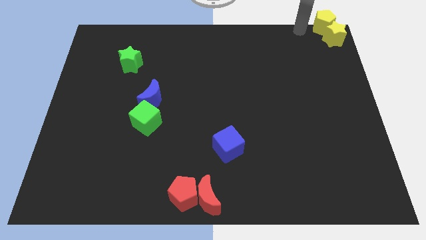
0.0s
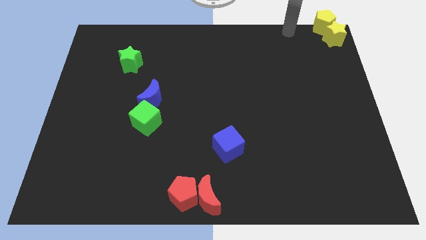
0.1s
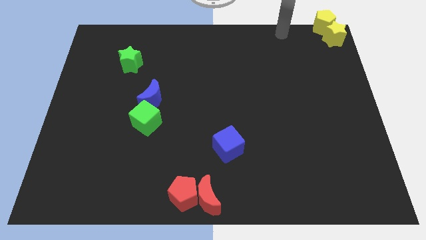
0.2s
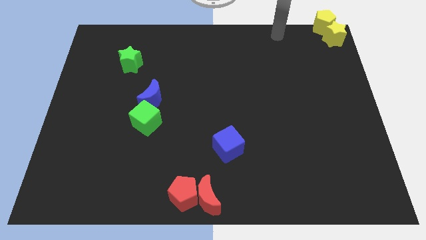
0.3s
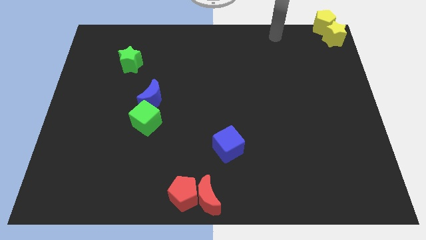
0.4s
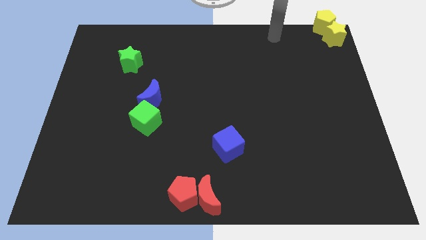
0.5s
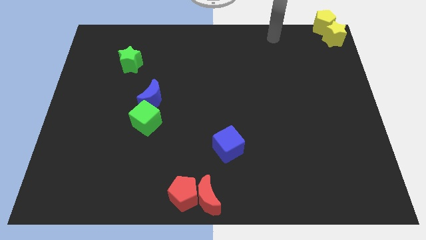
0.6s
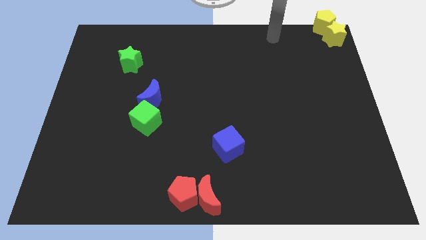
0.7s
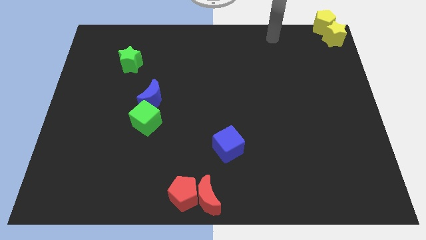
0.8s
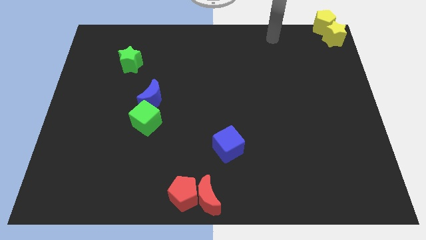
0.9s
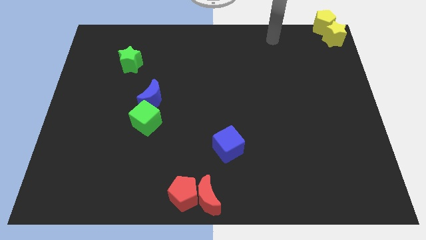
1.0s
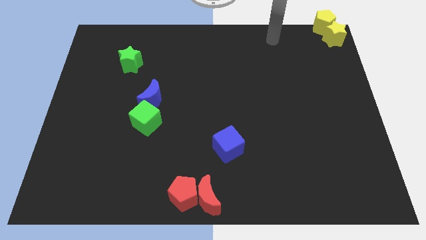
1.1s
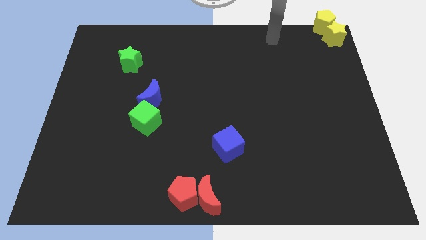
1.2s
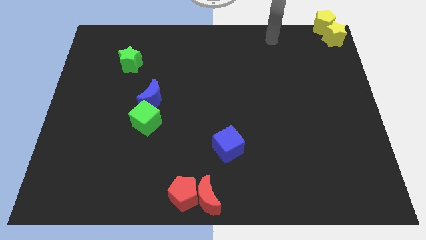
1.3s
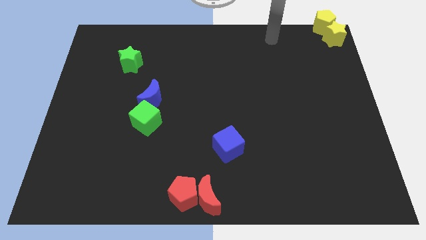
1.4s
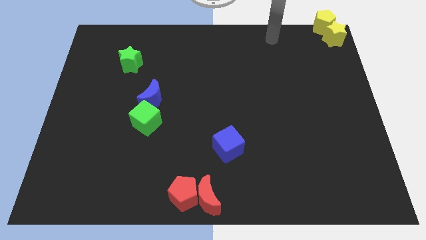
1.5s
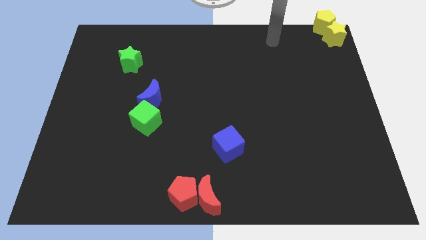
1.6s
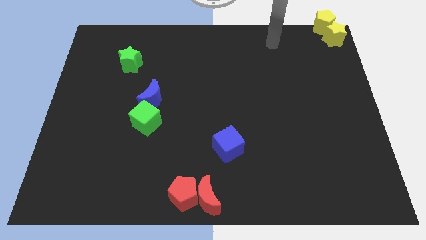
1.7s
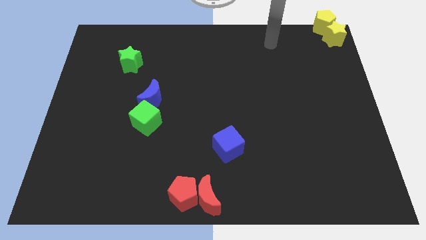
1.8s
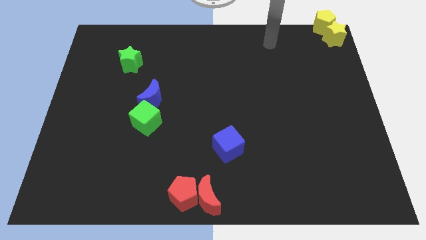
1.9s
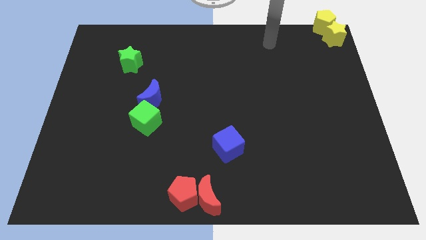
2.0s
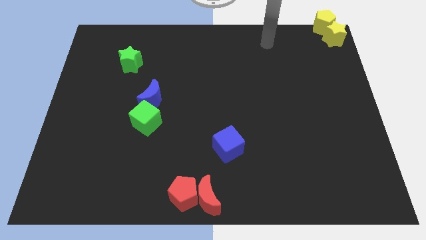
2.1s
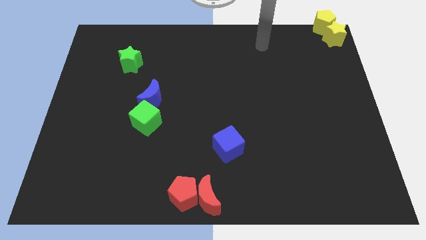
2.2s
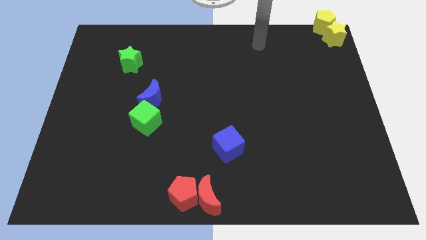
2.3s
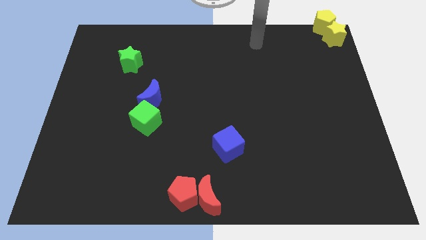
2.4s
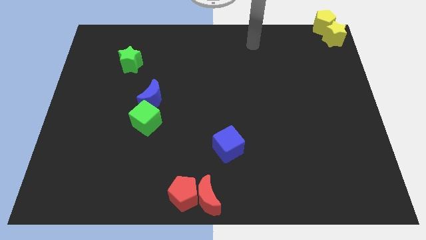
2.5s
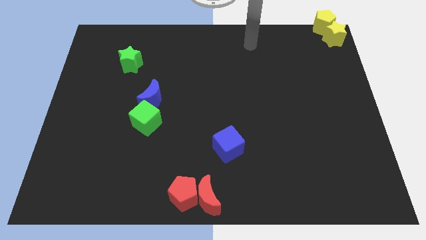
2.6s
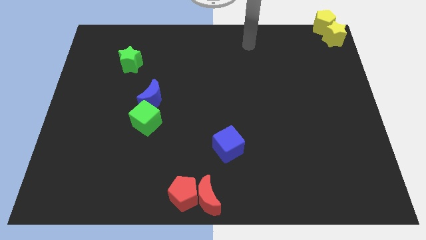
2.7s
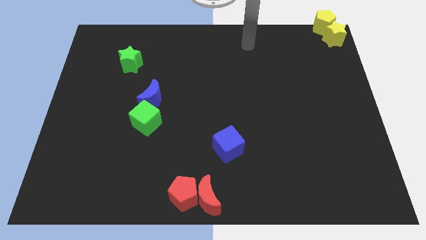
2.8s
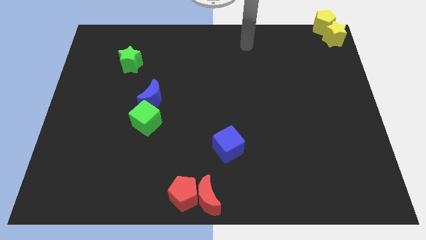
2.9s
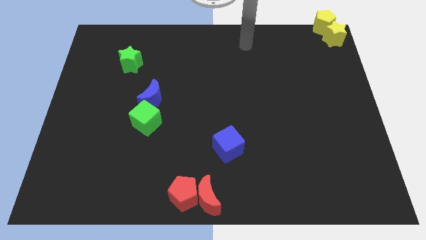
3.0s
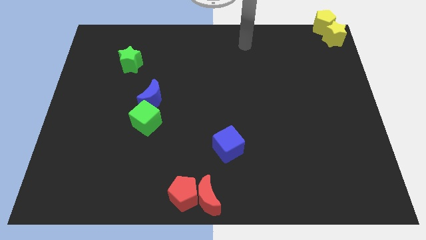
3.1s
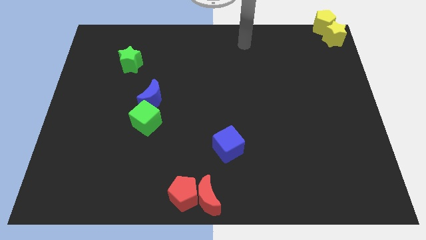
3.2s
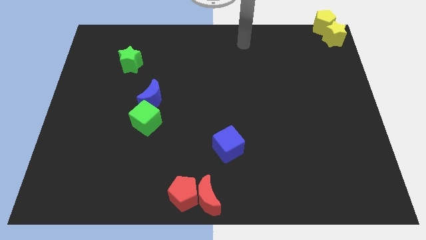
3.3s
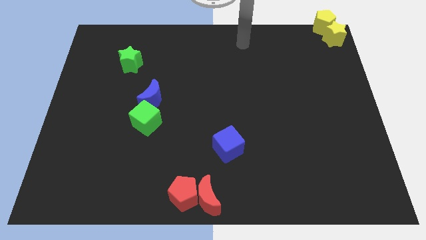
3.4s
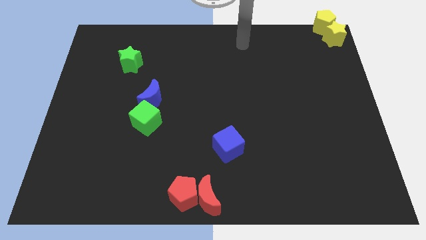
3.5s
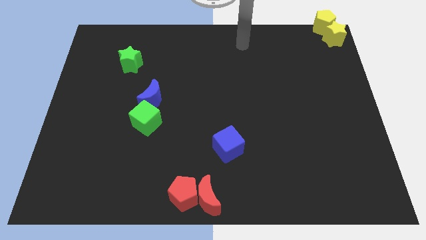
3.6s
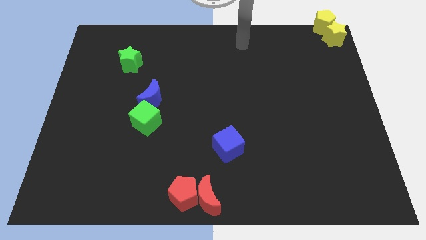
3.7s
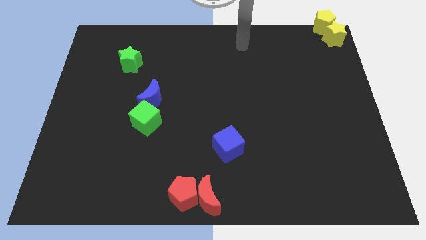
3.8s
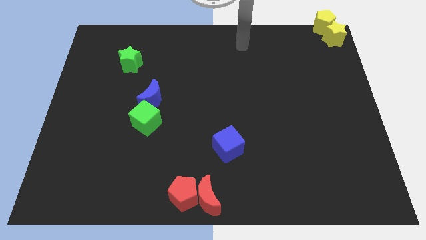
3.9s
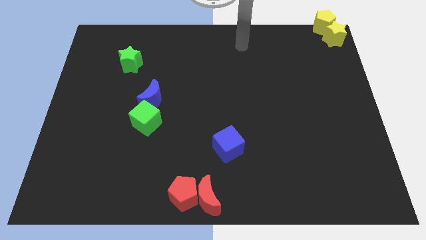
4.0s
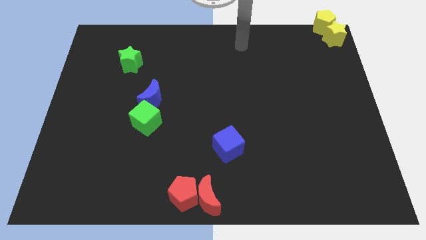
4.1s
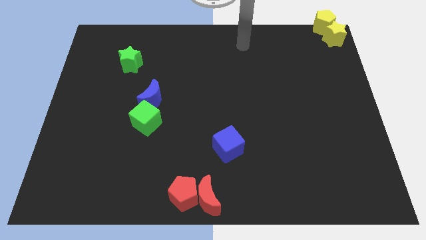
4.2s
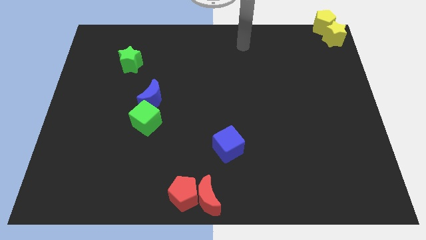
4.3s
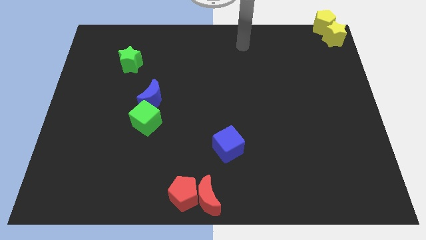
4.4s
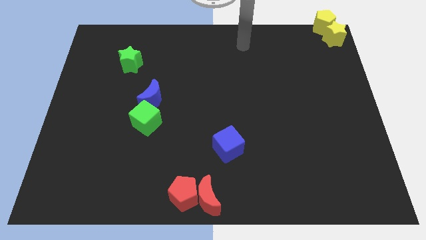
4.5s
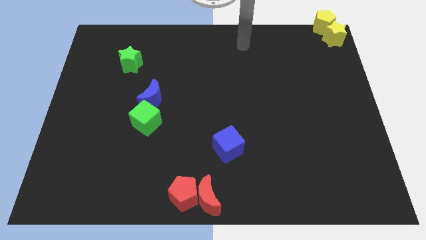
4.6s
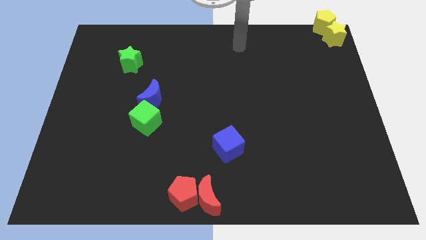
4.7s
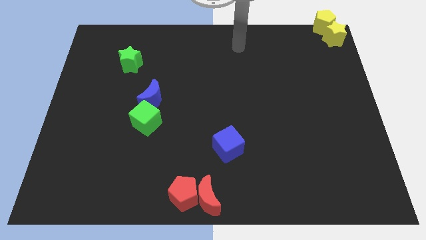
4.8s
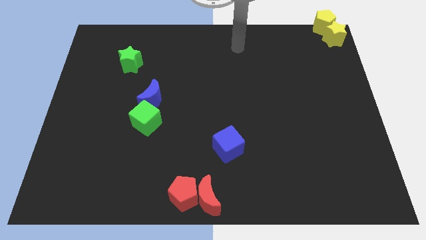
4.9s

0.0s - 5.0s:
go to the top center of the table

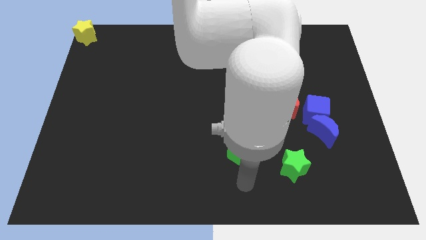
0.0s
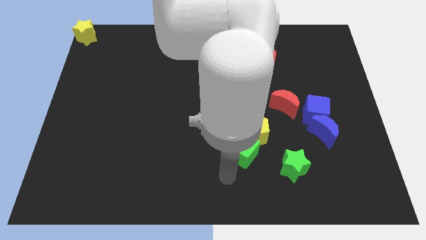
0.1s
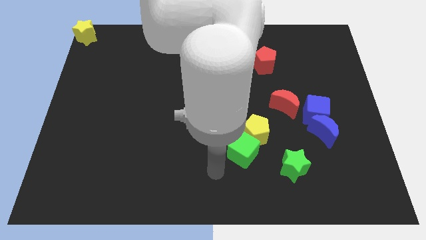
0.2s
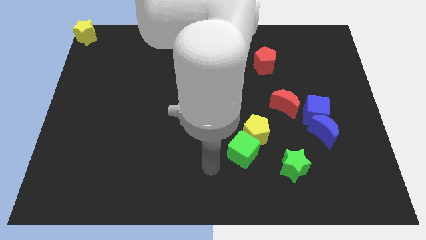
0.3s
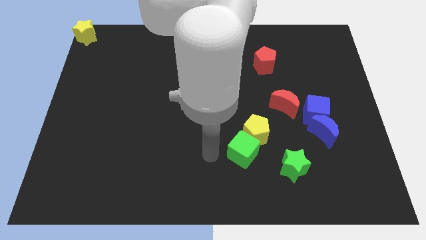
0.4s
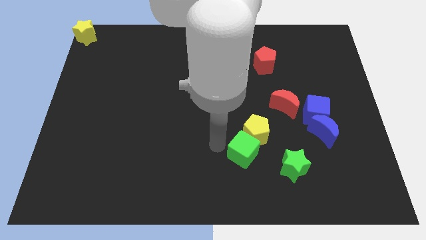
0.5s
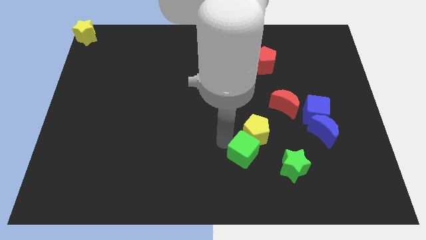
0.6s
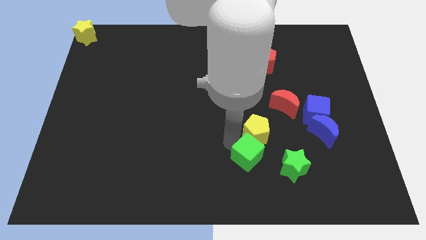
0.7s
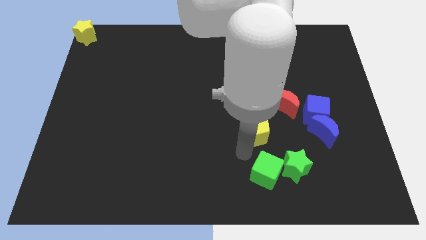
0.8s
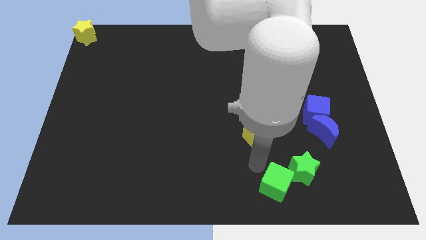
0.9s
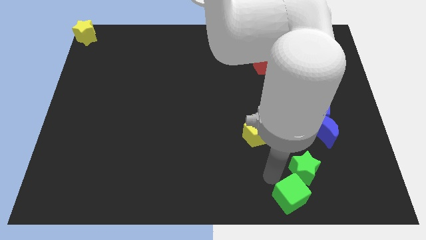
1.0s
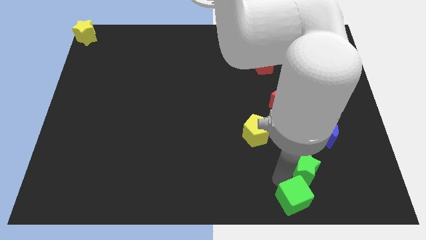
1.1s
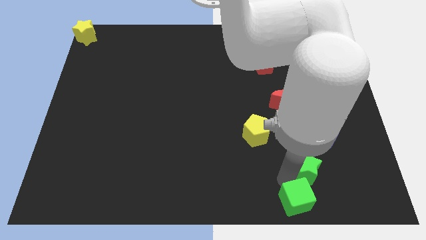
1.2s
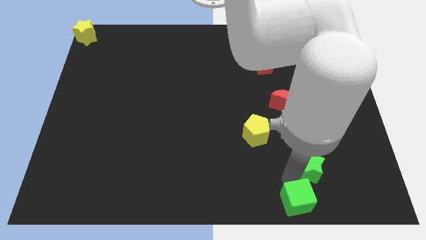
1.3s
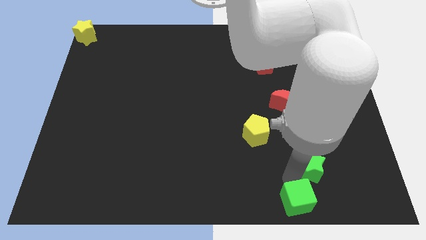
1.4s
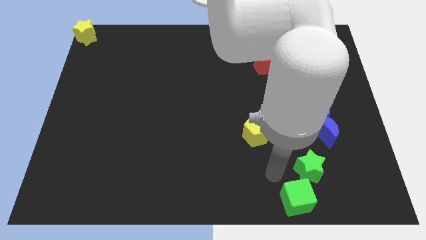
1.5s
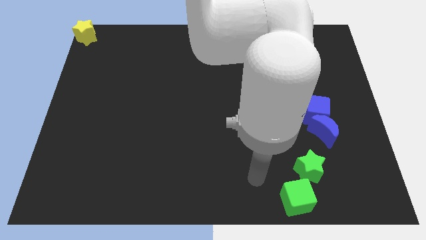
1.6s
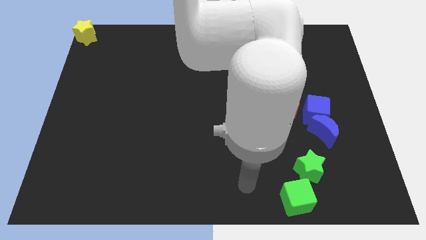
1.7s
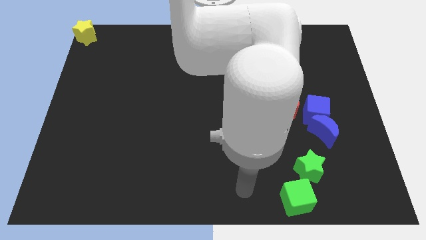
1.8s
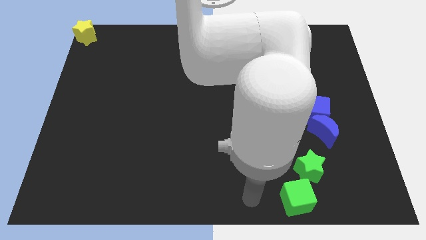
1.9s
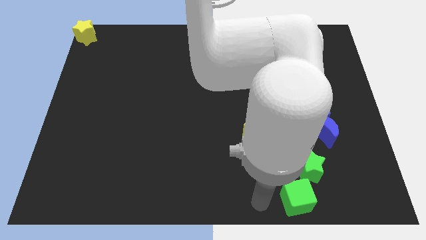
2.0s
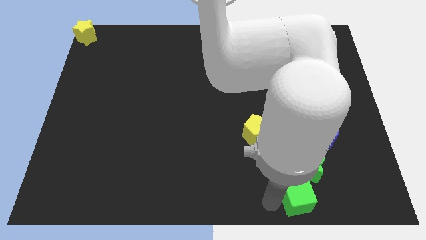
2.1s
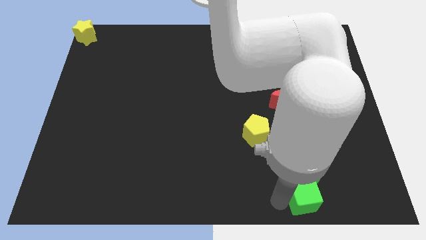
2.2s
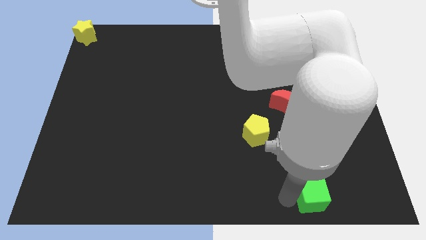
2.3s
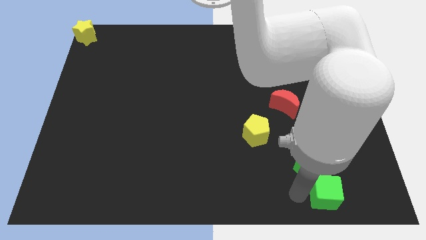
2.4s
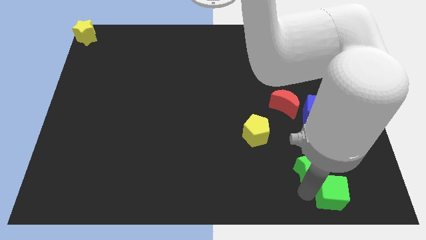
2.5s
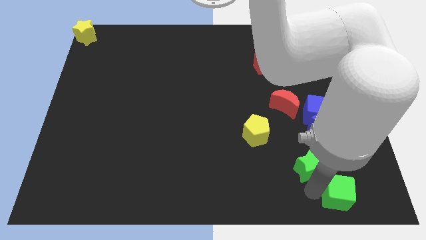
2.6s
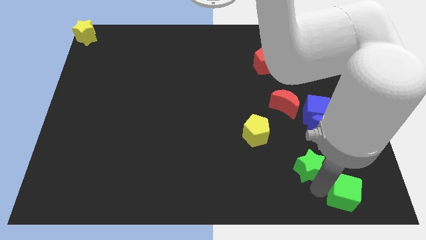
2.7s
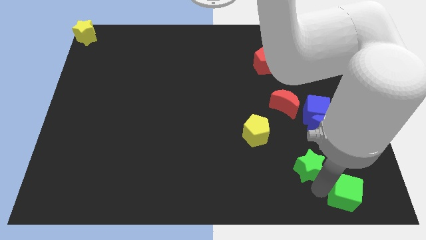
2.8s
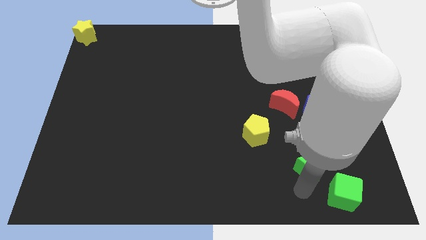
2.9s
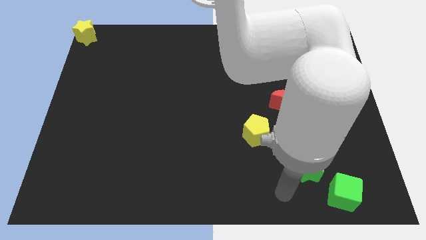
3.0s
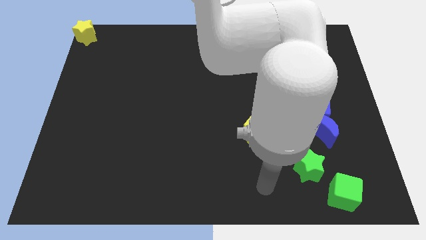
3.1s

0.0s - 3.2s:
place the green cube to the bottom right of the green star

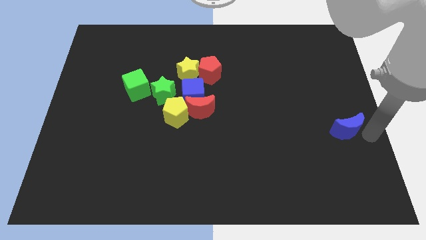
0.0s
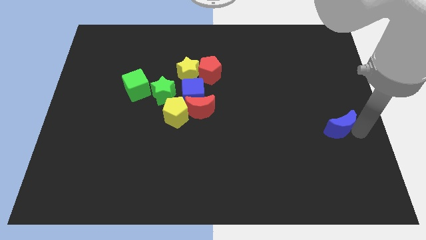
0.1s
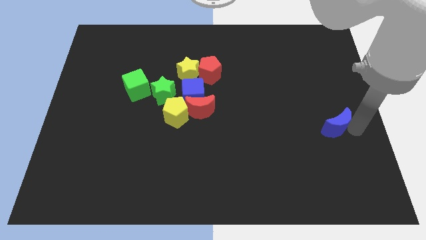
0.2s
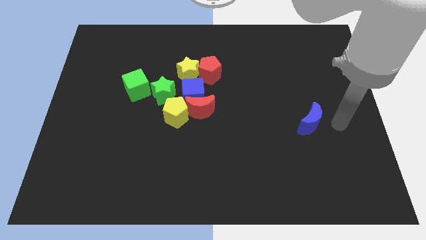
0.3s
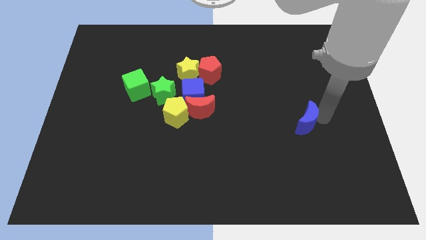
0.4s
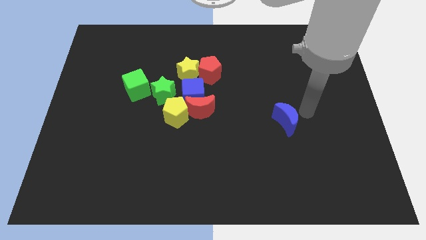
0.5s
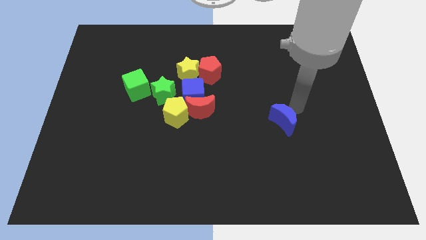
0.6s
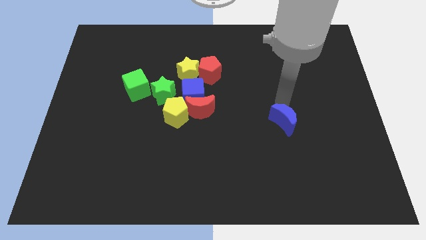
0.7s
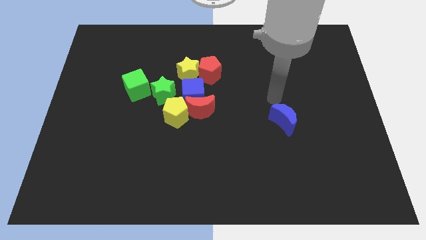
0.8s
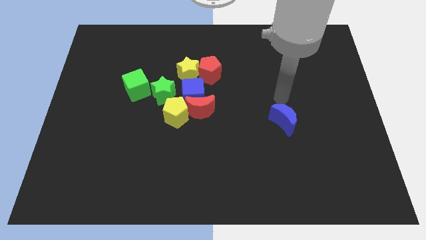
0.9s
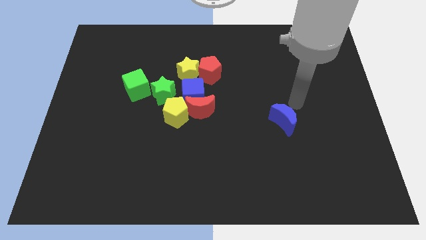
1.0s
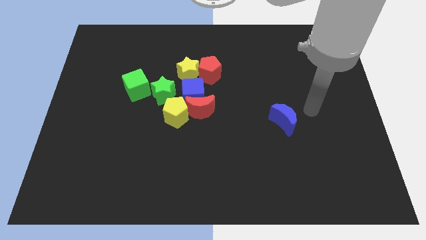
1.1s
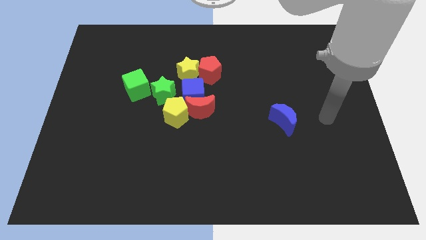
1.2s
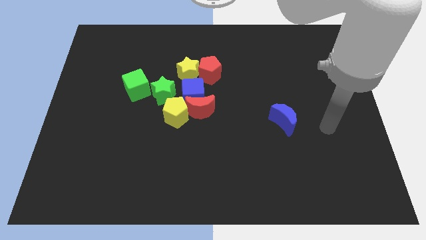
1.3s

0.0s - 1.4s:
push the blue moon slightly to the left side
